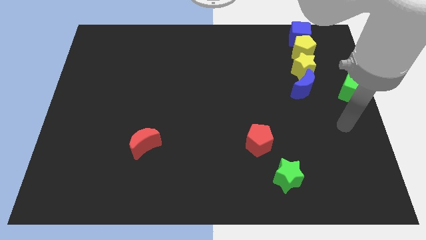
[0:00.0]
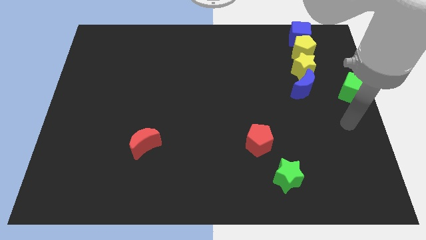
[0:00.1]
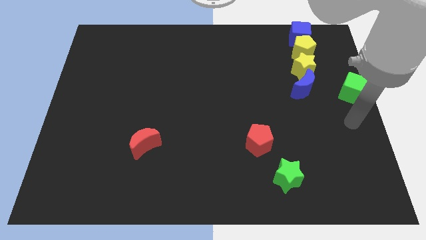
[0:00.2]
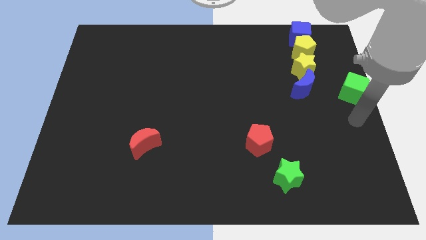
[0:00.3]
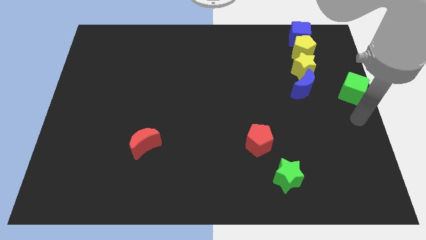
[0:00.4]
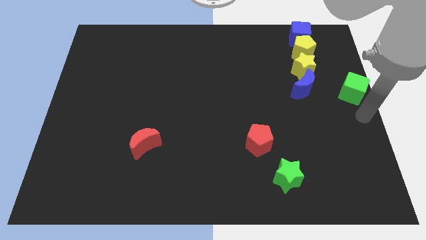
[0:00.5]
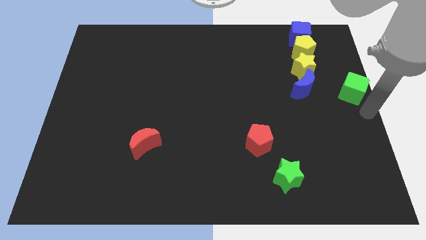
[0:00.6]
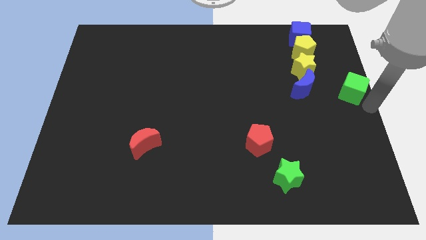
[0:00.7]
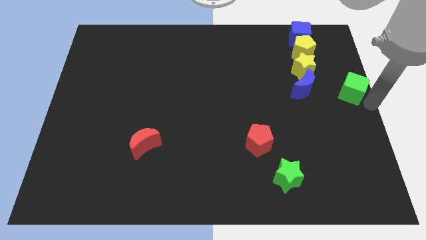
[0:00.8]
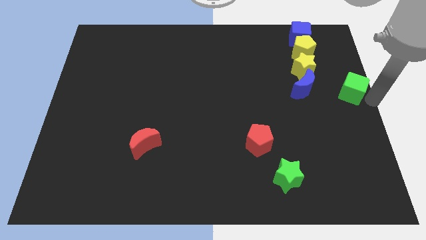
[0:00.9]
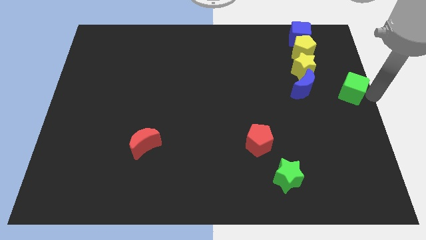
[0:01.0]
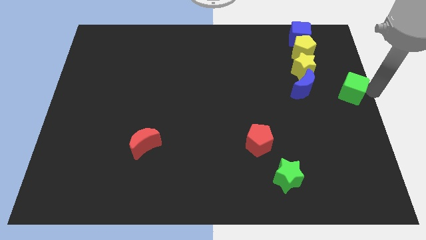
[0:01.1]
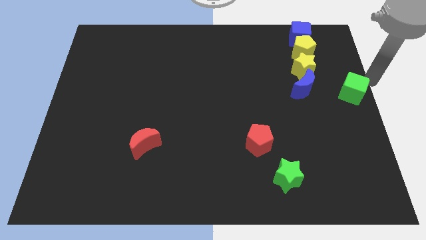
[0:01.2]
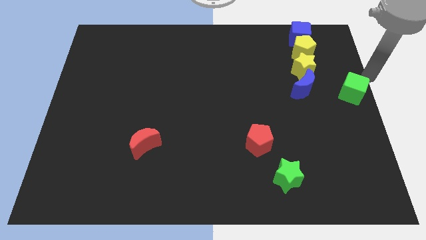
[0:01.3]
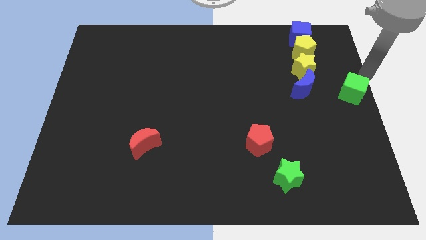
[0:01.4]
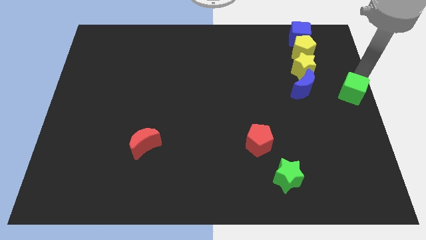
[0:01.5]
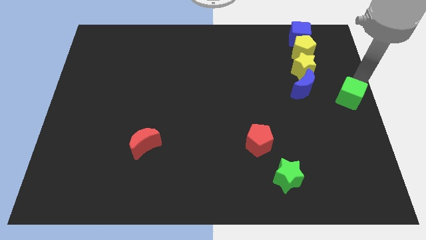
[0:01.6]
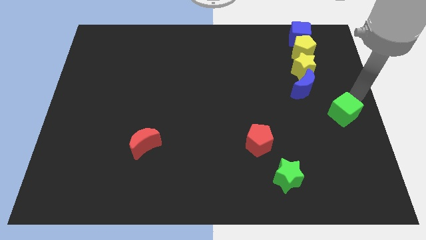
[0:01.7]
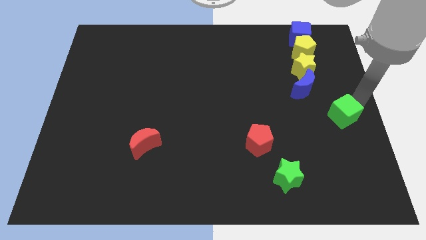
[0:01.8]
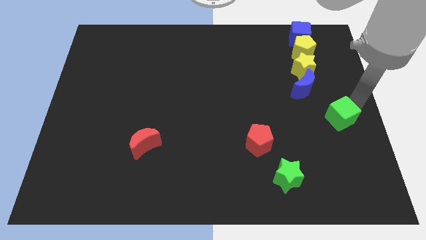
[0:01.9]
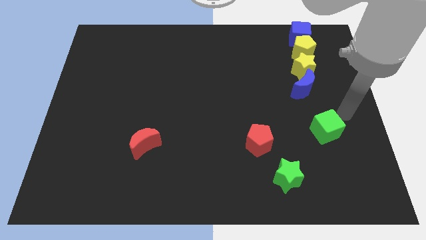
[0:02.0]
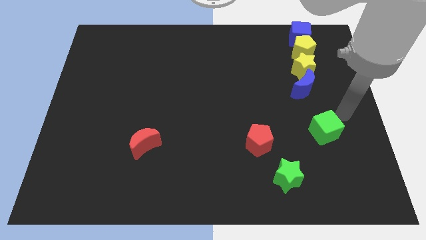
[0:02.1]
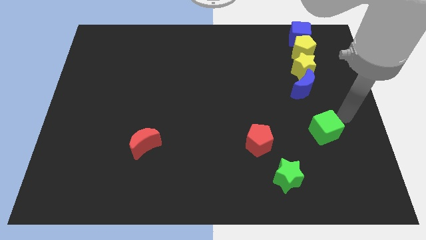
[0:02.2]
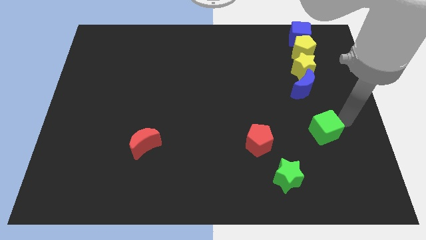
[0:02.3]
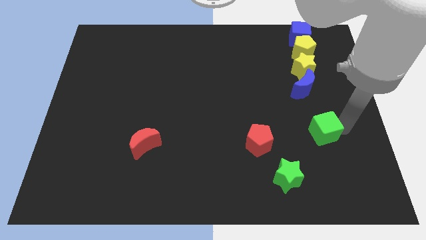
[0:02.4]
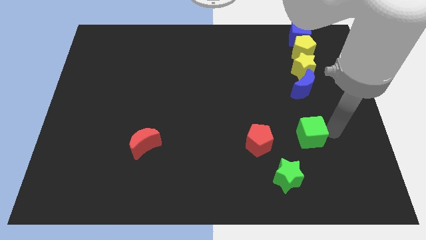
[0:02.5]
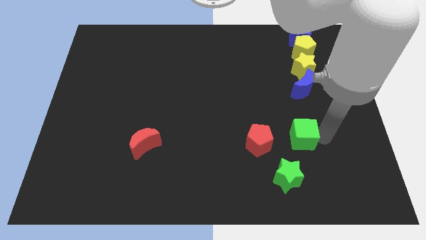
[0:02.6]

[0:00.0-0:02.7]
put the green cube below the vertical line of blocks

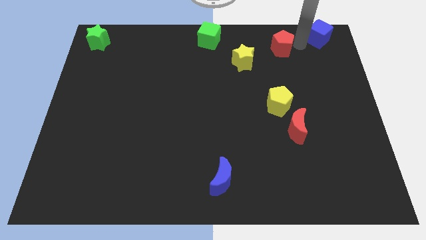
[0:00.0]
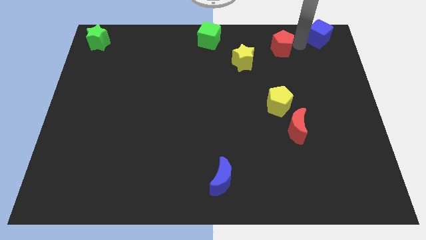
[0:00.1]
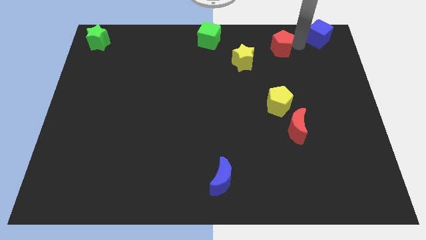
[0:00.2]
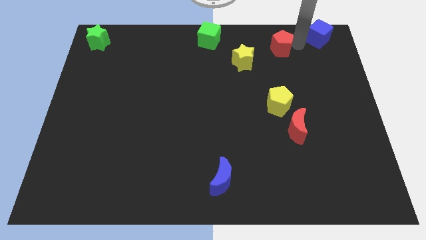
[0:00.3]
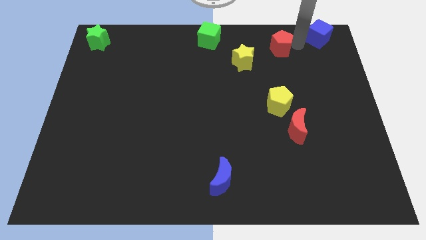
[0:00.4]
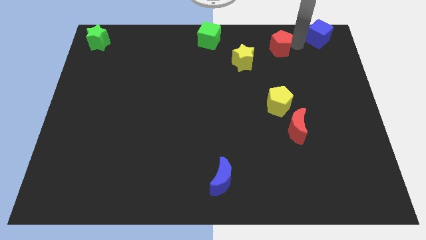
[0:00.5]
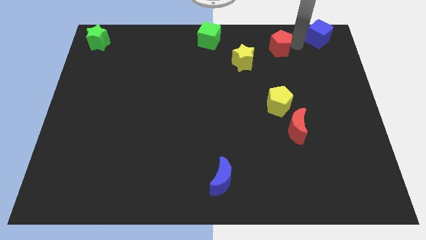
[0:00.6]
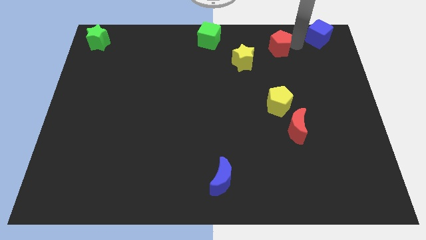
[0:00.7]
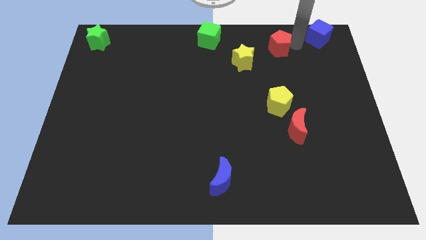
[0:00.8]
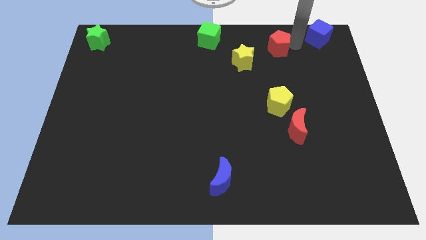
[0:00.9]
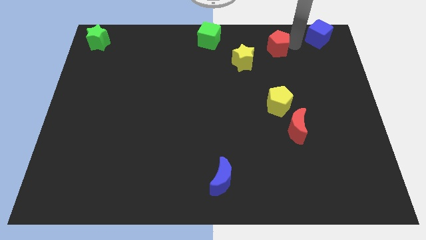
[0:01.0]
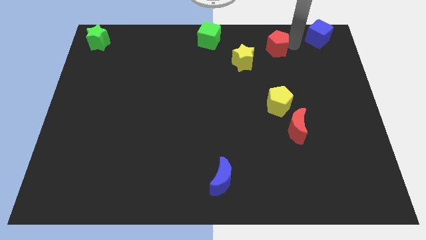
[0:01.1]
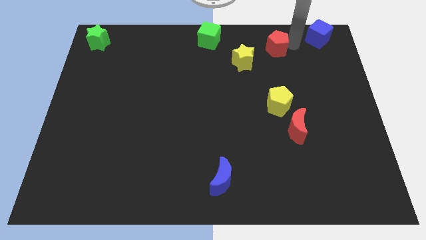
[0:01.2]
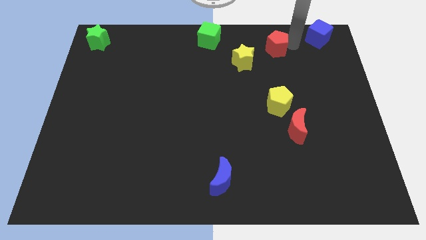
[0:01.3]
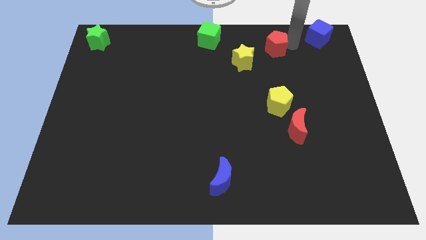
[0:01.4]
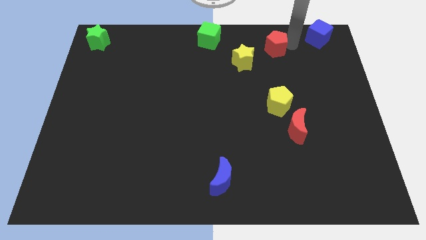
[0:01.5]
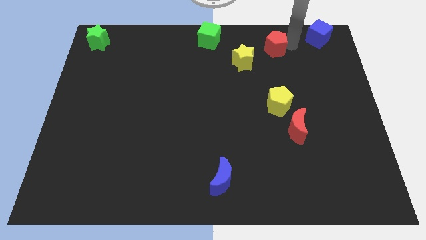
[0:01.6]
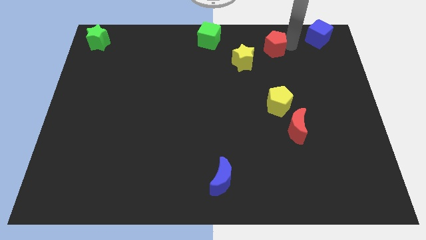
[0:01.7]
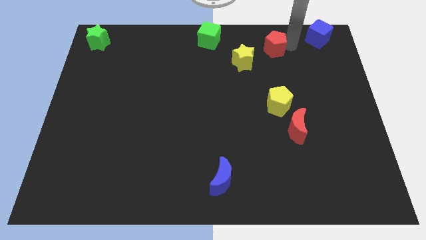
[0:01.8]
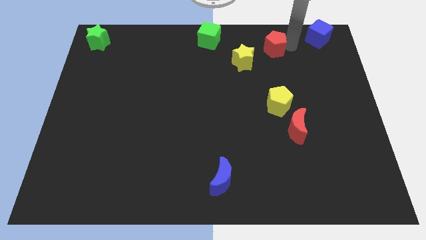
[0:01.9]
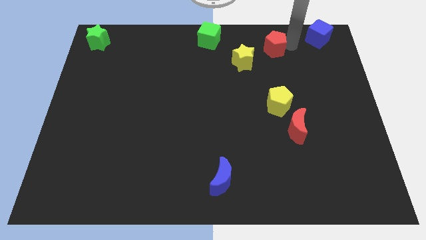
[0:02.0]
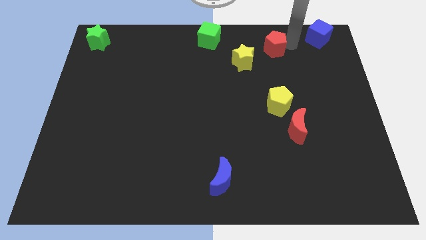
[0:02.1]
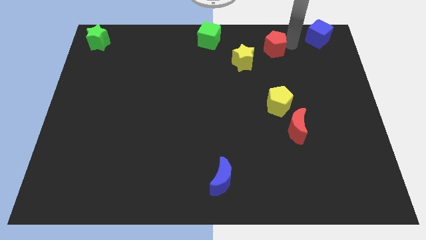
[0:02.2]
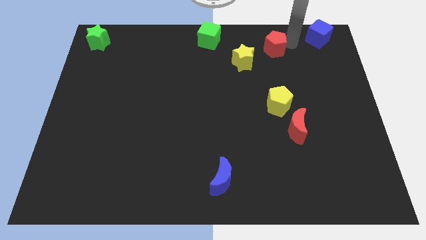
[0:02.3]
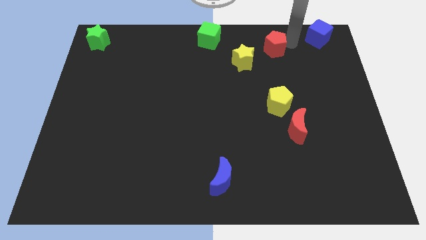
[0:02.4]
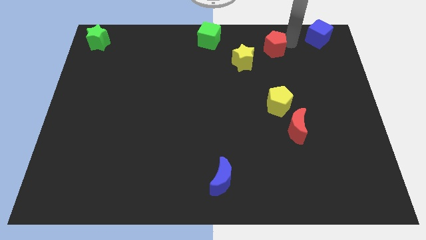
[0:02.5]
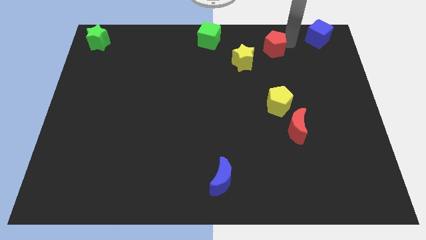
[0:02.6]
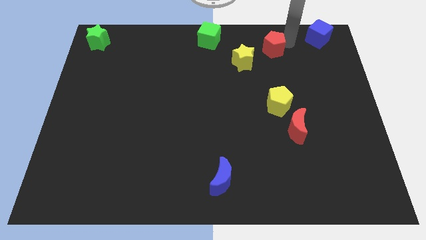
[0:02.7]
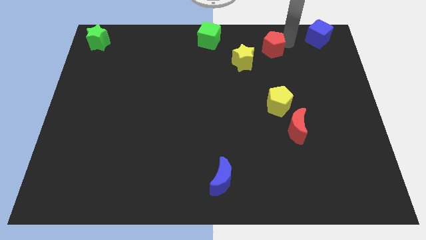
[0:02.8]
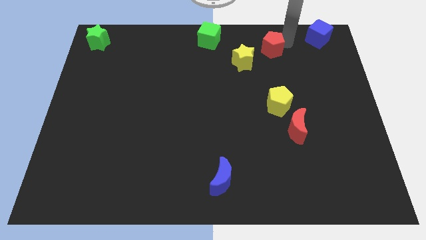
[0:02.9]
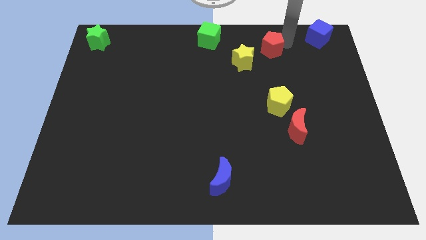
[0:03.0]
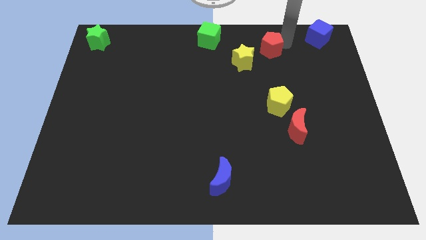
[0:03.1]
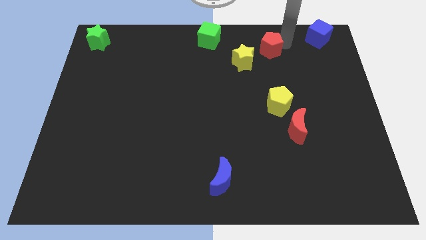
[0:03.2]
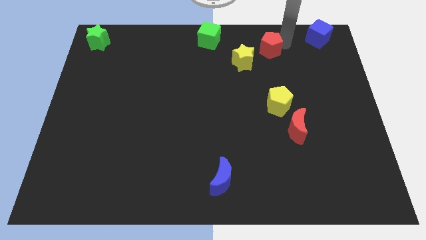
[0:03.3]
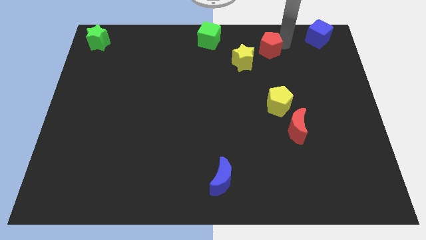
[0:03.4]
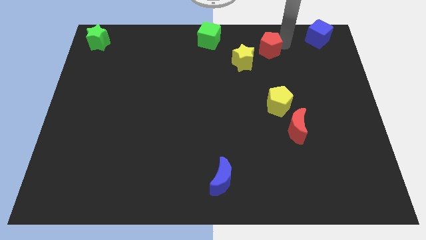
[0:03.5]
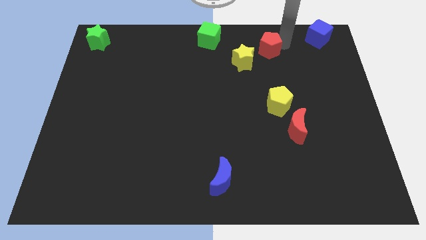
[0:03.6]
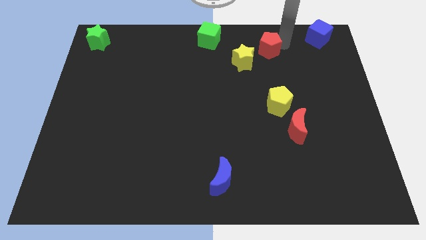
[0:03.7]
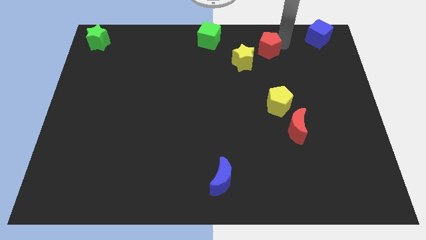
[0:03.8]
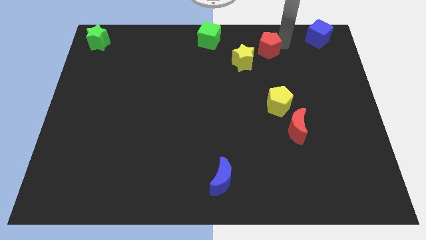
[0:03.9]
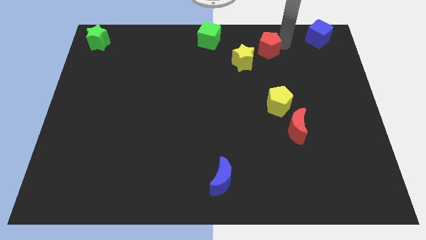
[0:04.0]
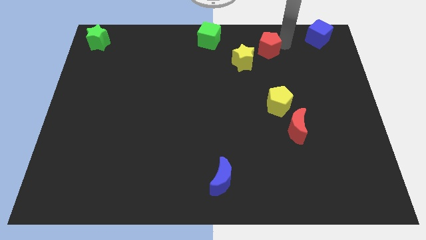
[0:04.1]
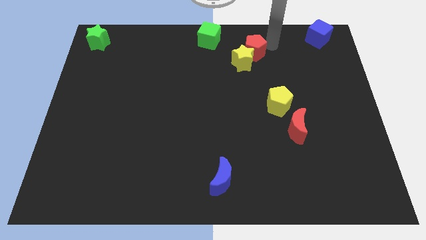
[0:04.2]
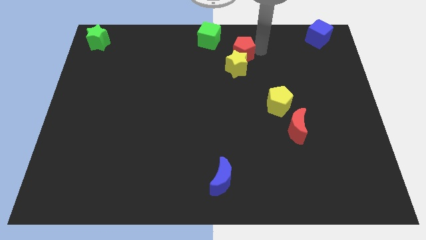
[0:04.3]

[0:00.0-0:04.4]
push the red pentagon close to the yellow star

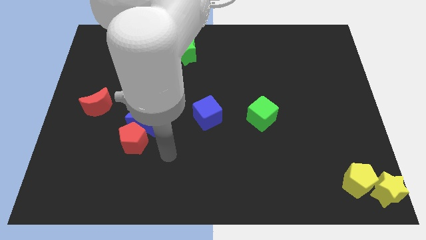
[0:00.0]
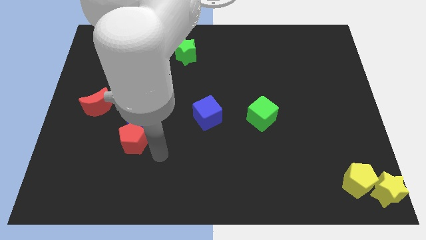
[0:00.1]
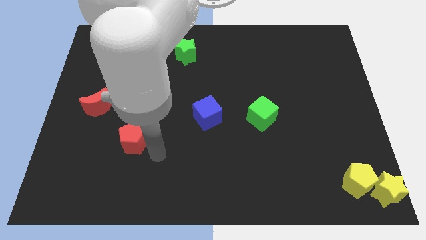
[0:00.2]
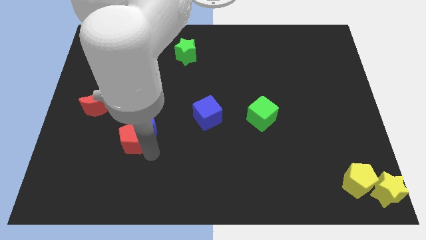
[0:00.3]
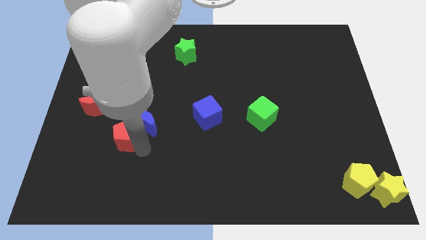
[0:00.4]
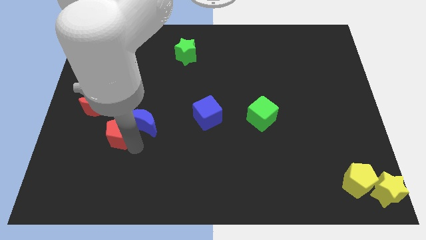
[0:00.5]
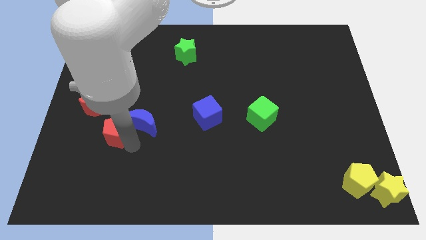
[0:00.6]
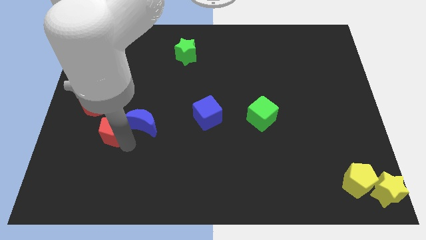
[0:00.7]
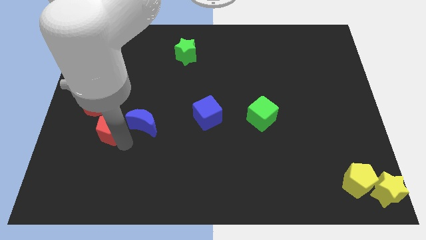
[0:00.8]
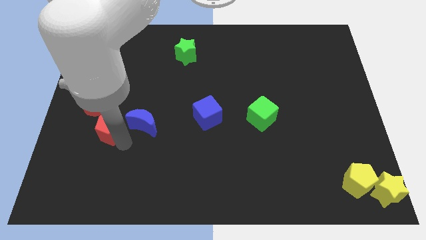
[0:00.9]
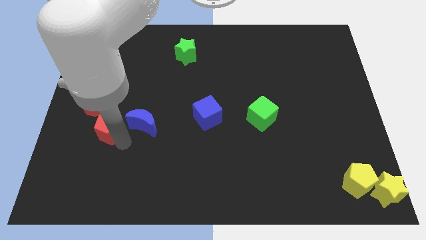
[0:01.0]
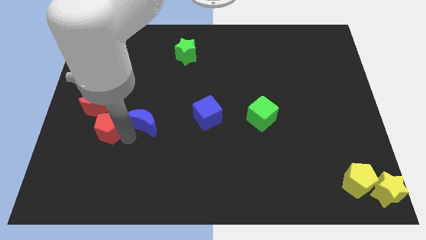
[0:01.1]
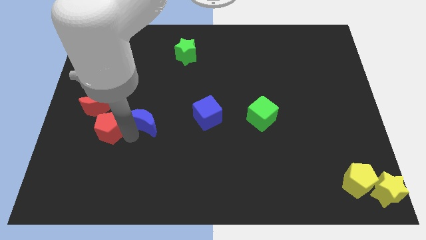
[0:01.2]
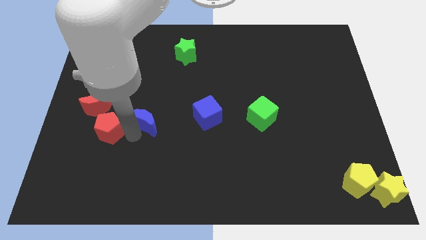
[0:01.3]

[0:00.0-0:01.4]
push the red pentagon near to the red moon

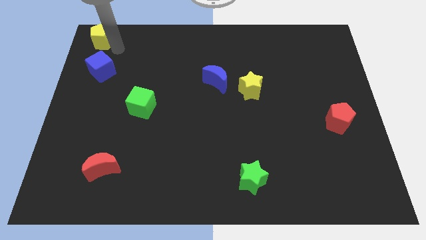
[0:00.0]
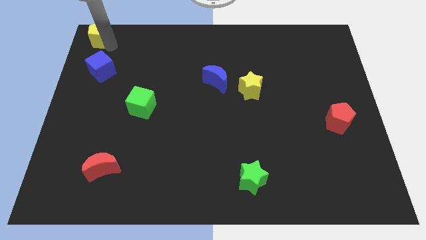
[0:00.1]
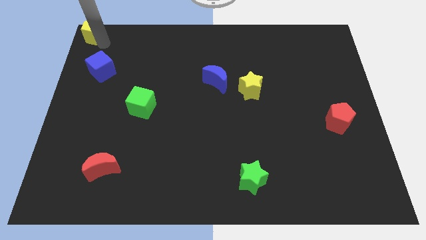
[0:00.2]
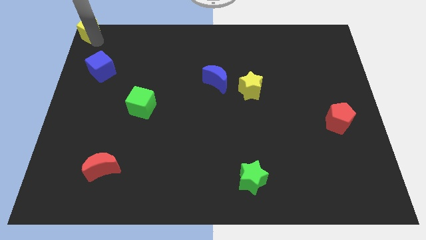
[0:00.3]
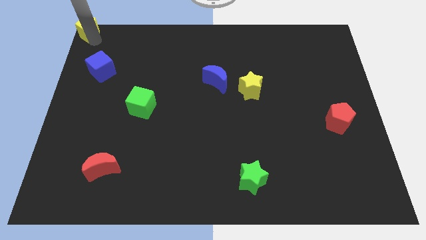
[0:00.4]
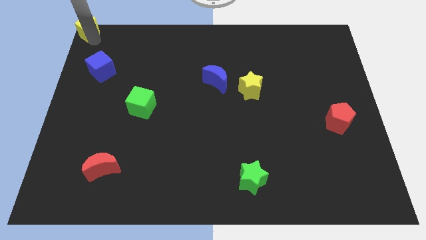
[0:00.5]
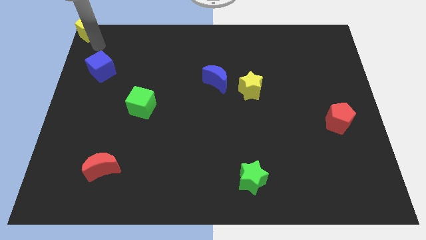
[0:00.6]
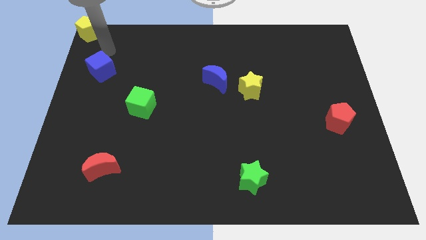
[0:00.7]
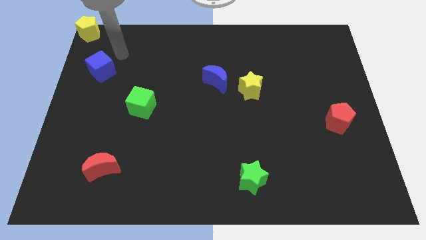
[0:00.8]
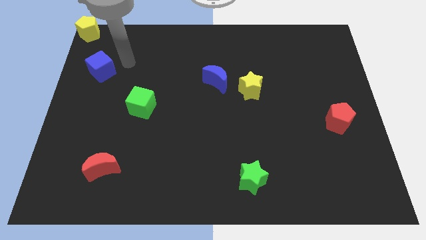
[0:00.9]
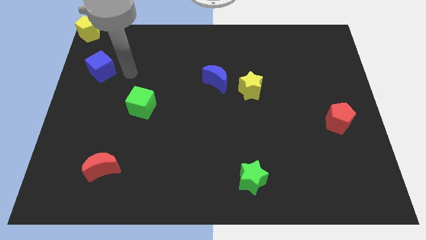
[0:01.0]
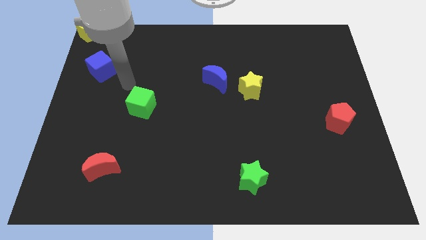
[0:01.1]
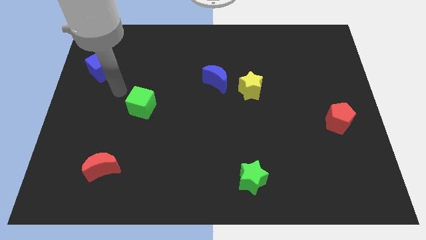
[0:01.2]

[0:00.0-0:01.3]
place the yellow pentagon at the top left corner of the board
